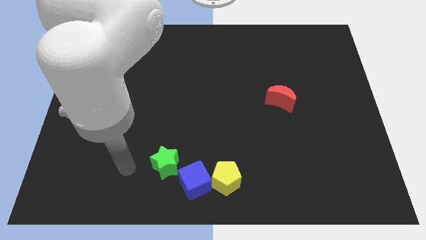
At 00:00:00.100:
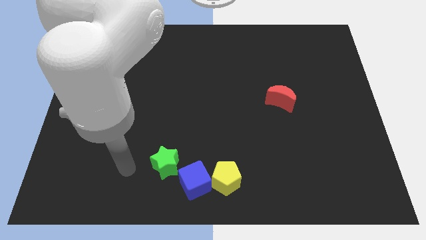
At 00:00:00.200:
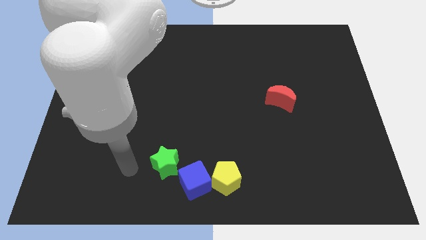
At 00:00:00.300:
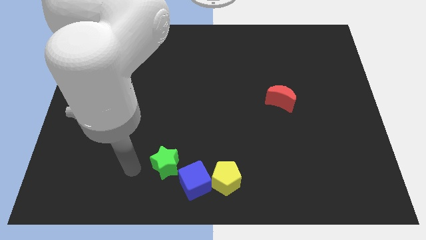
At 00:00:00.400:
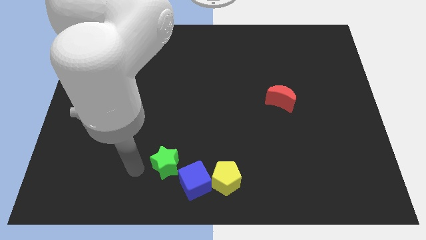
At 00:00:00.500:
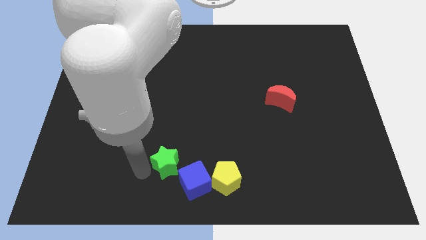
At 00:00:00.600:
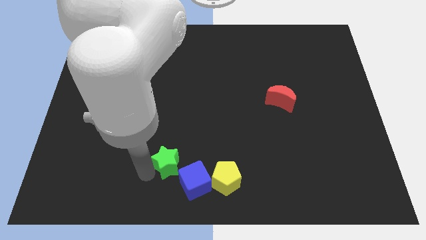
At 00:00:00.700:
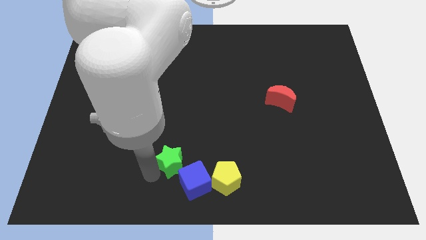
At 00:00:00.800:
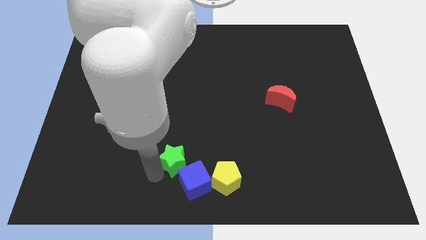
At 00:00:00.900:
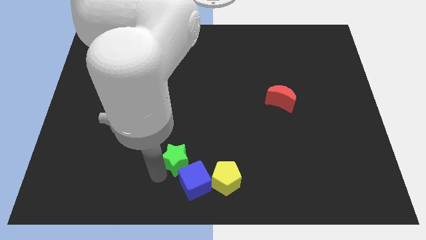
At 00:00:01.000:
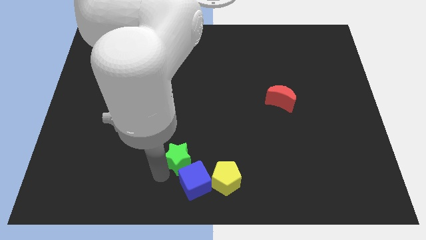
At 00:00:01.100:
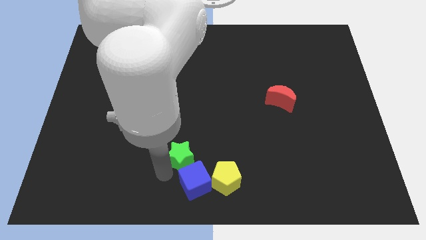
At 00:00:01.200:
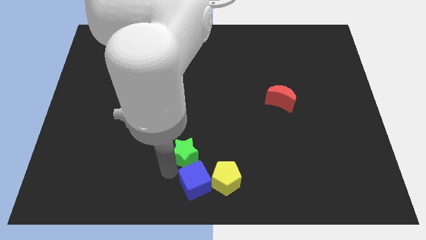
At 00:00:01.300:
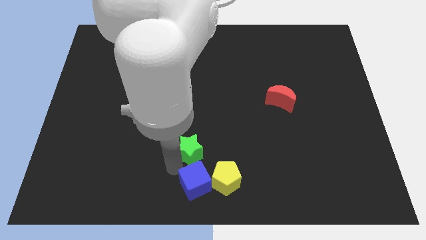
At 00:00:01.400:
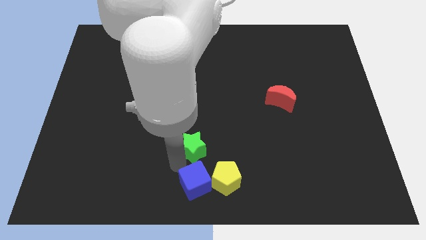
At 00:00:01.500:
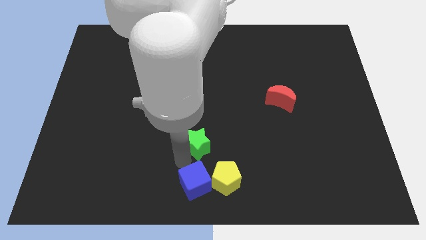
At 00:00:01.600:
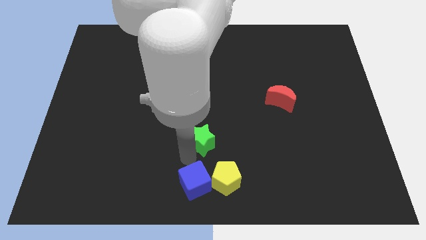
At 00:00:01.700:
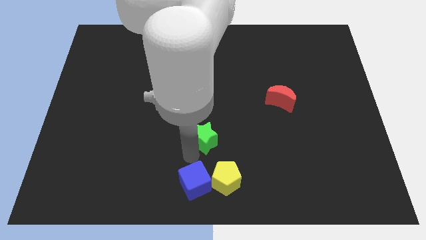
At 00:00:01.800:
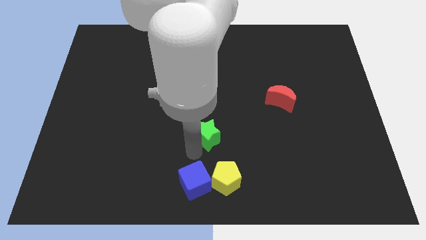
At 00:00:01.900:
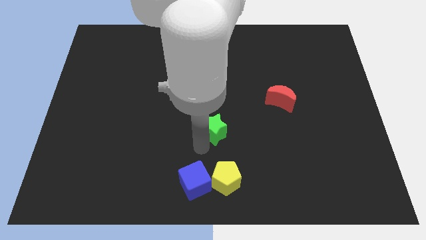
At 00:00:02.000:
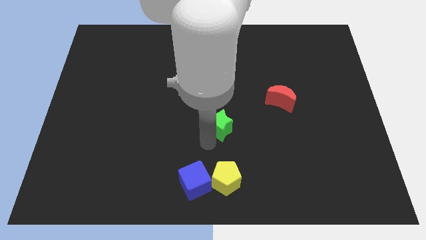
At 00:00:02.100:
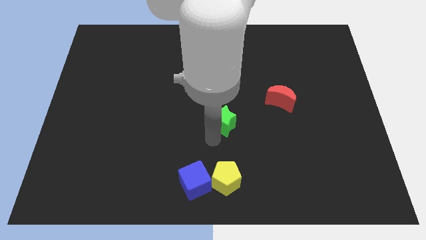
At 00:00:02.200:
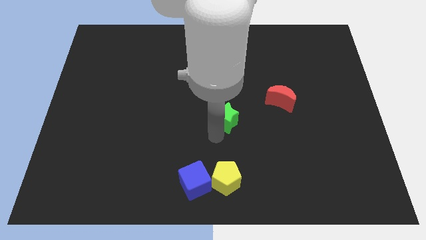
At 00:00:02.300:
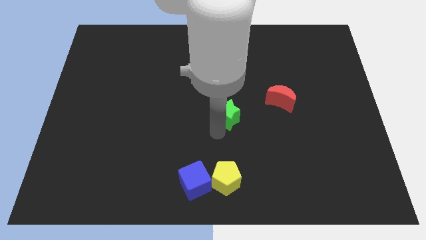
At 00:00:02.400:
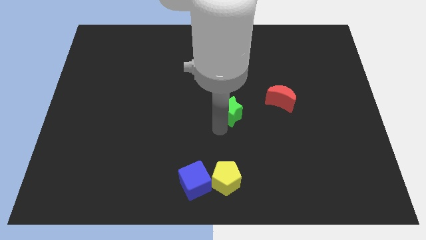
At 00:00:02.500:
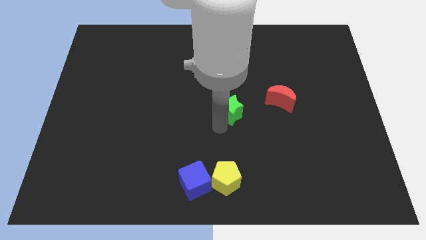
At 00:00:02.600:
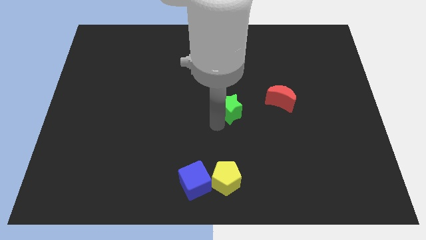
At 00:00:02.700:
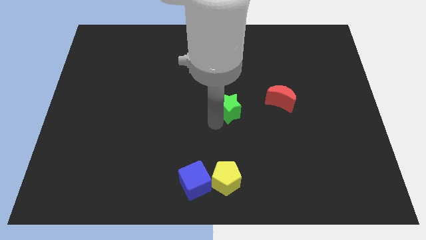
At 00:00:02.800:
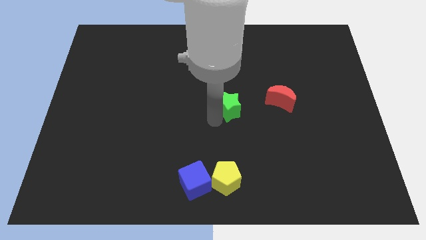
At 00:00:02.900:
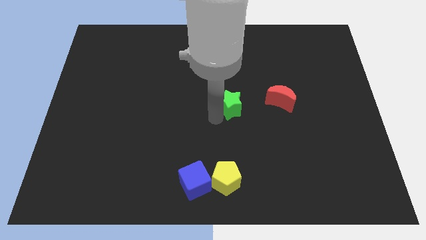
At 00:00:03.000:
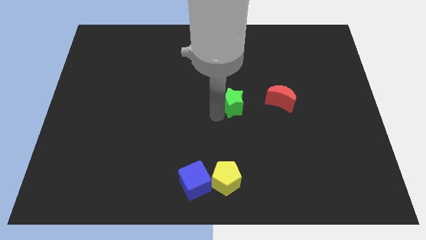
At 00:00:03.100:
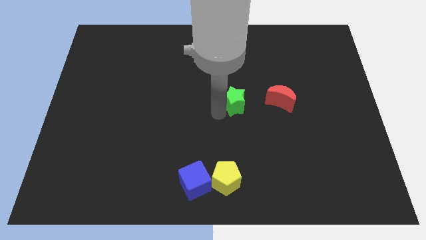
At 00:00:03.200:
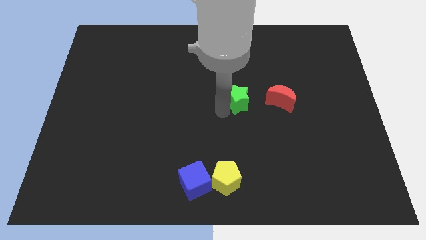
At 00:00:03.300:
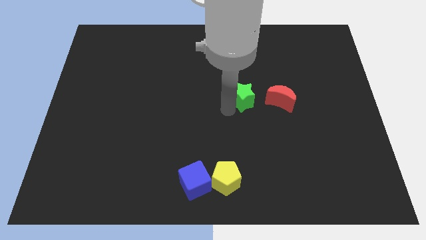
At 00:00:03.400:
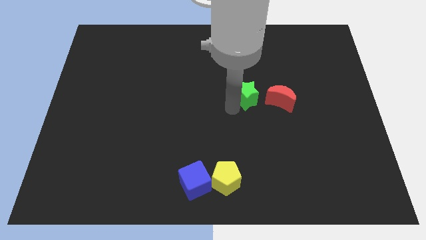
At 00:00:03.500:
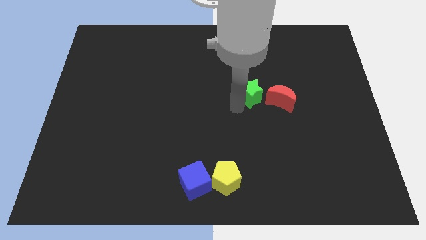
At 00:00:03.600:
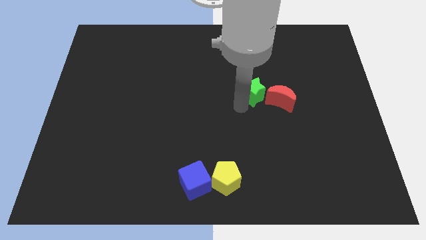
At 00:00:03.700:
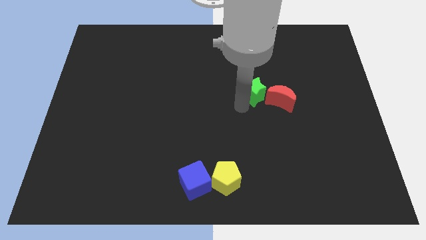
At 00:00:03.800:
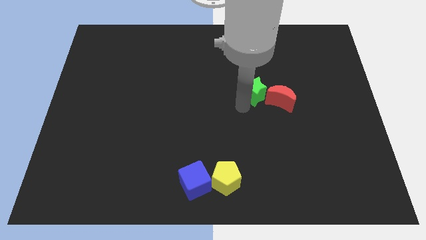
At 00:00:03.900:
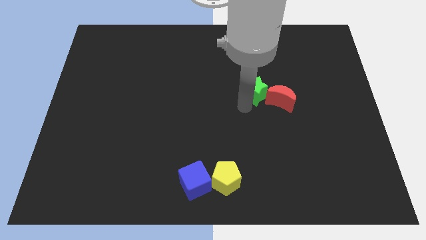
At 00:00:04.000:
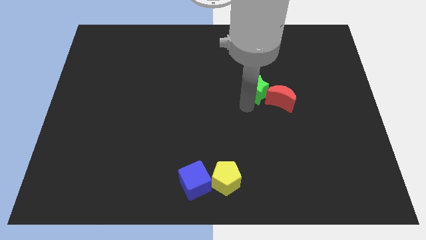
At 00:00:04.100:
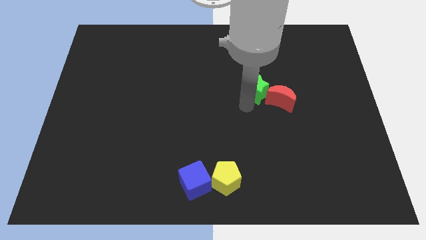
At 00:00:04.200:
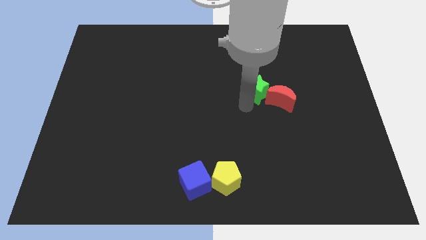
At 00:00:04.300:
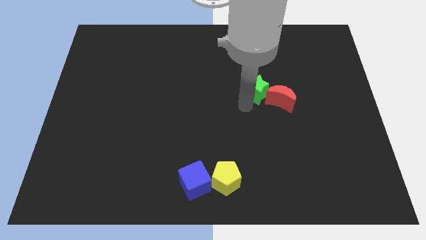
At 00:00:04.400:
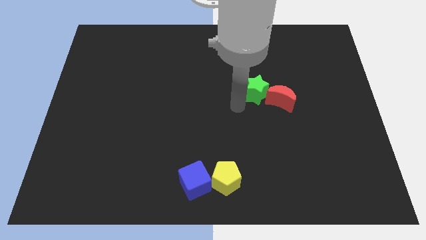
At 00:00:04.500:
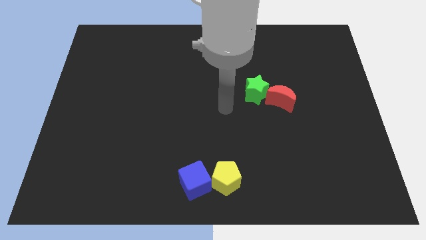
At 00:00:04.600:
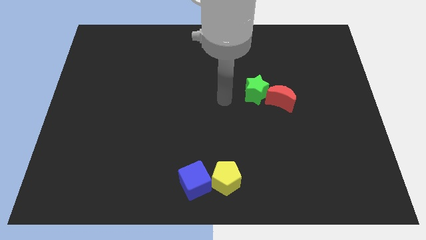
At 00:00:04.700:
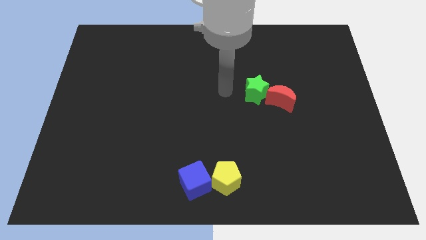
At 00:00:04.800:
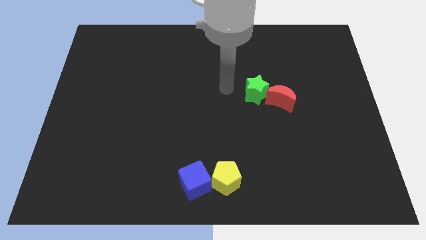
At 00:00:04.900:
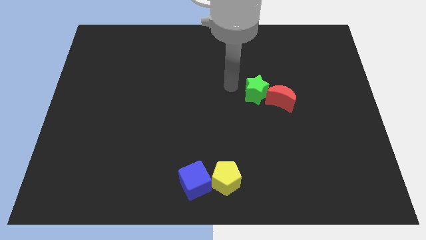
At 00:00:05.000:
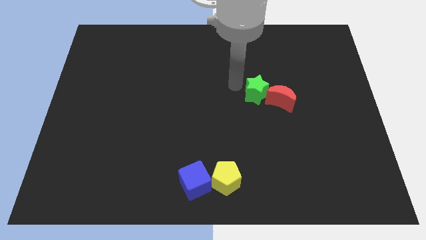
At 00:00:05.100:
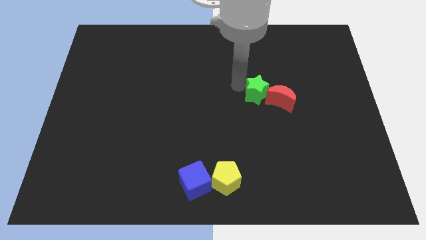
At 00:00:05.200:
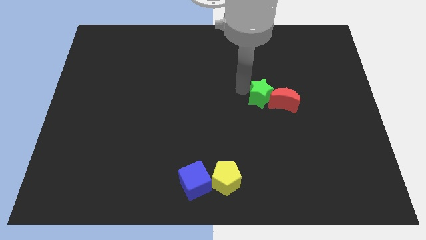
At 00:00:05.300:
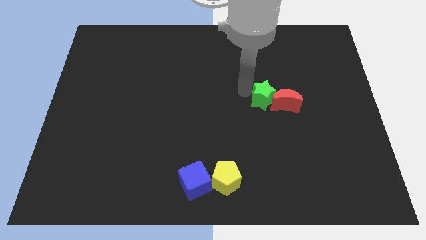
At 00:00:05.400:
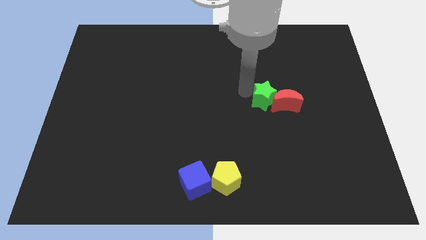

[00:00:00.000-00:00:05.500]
move the star towards the red moon

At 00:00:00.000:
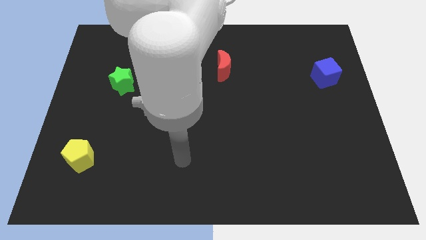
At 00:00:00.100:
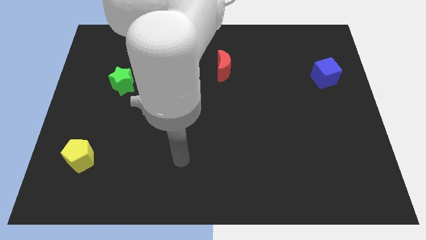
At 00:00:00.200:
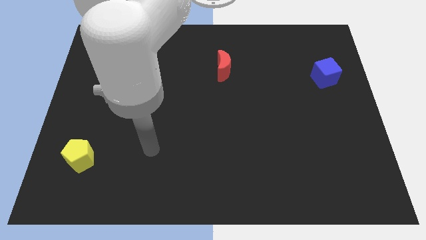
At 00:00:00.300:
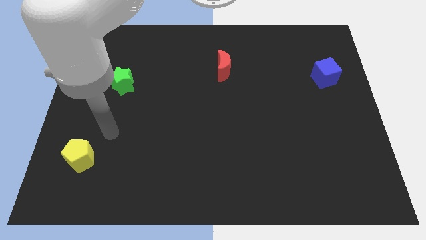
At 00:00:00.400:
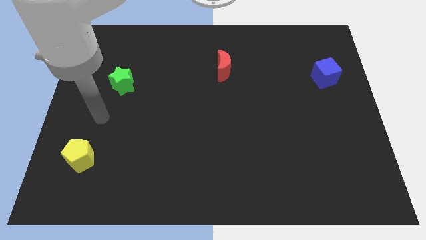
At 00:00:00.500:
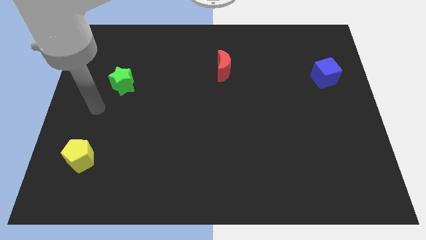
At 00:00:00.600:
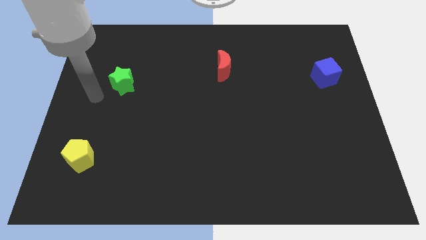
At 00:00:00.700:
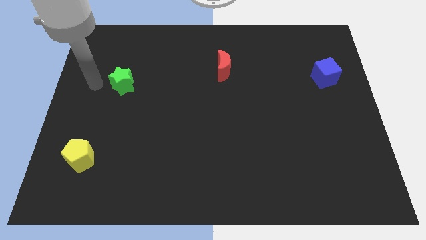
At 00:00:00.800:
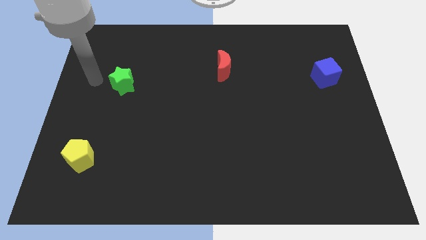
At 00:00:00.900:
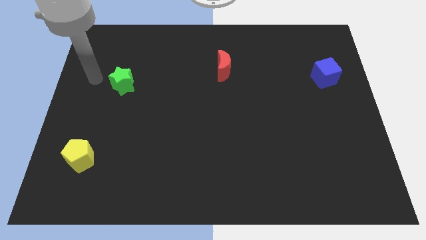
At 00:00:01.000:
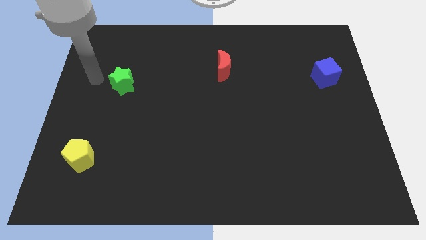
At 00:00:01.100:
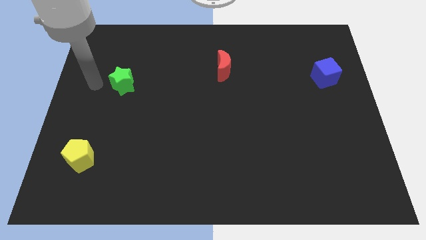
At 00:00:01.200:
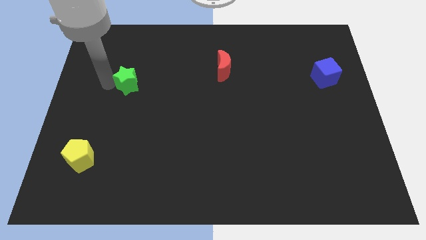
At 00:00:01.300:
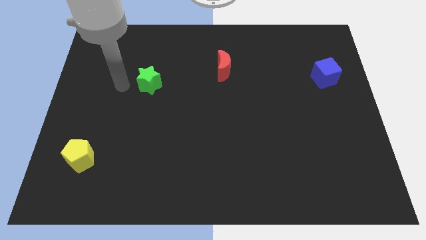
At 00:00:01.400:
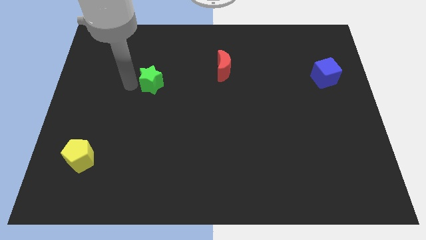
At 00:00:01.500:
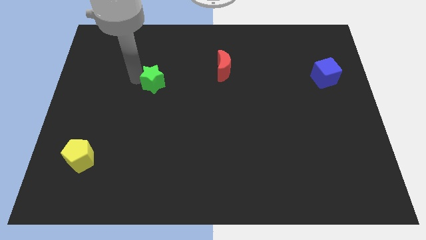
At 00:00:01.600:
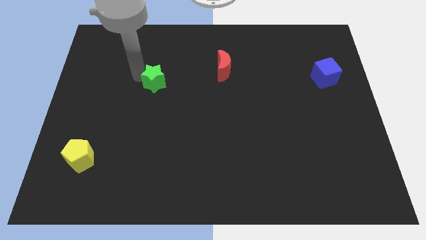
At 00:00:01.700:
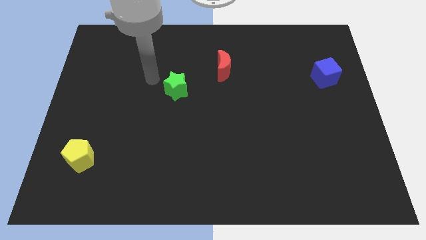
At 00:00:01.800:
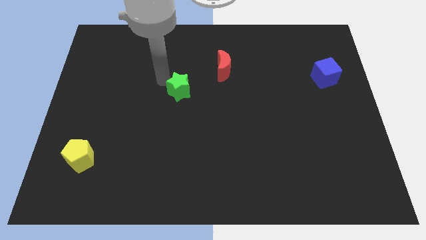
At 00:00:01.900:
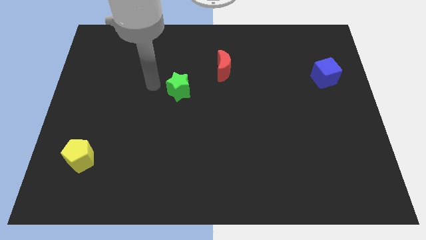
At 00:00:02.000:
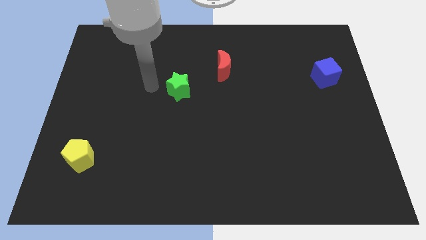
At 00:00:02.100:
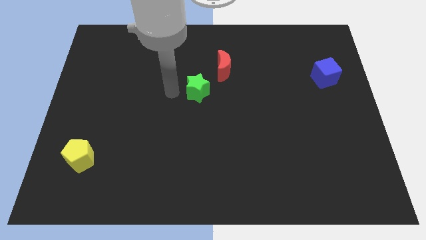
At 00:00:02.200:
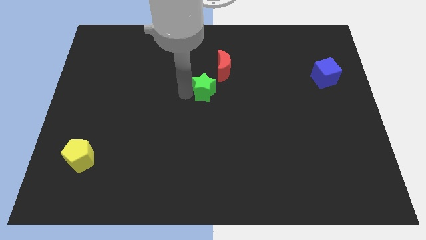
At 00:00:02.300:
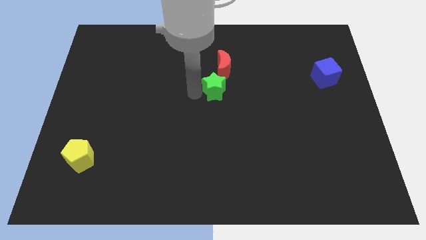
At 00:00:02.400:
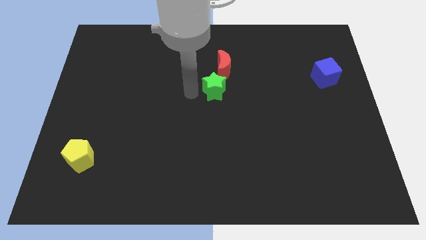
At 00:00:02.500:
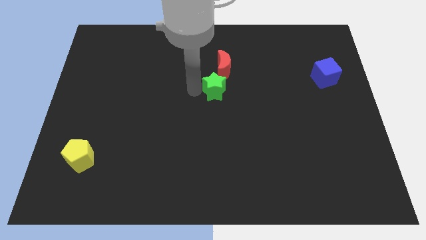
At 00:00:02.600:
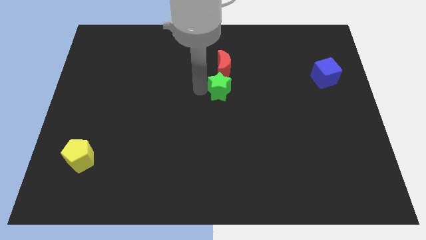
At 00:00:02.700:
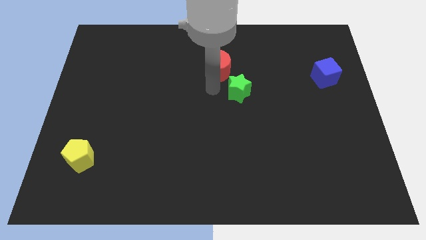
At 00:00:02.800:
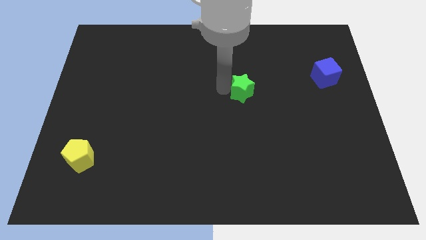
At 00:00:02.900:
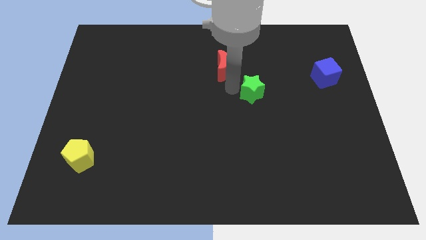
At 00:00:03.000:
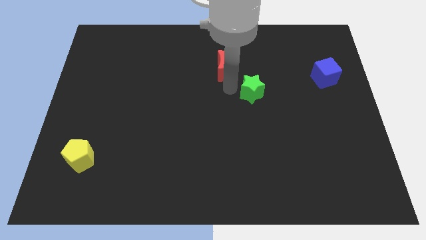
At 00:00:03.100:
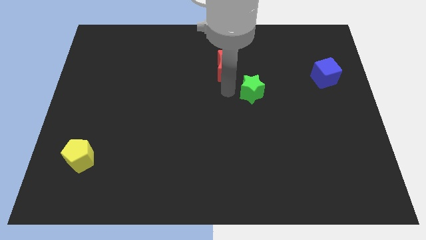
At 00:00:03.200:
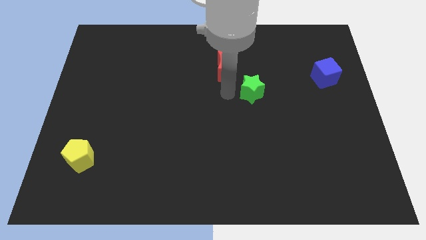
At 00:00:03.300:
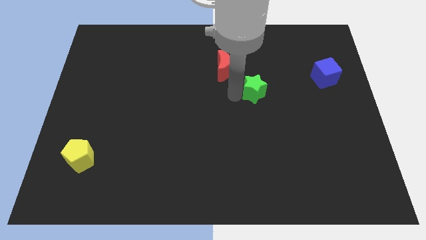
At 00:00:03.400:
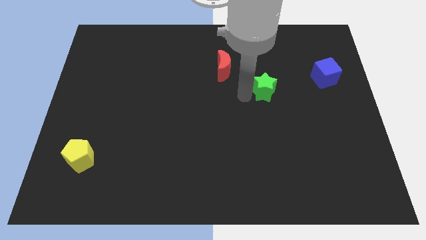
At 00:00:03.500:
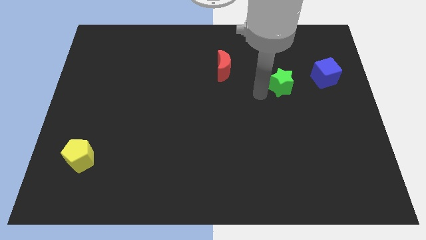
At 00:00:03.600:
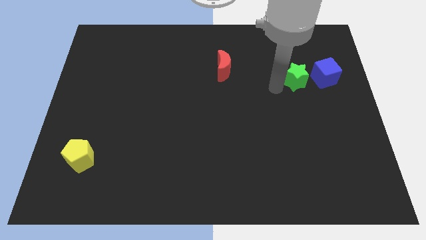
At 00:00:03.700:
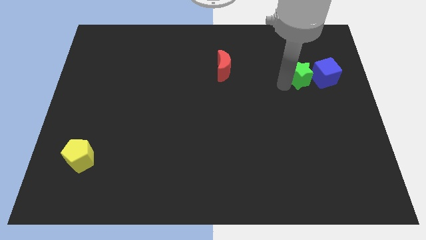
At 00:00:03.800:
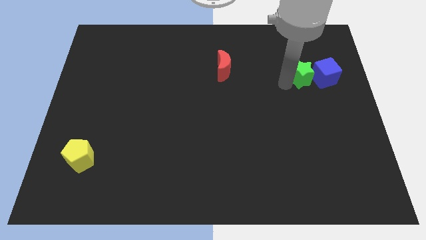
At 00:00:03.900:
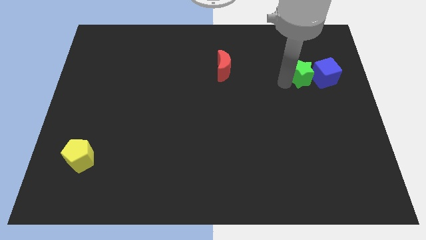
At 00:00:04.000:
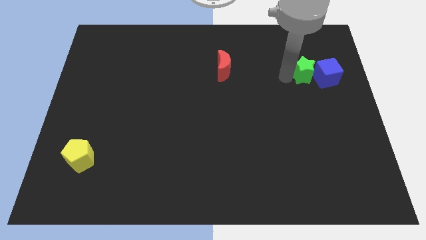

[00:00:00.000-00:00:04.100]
push the green star close to the blue block
